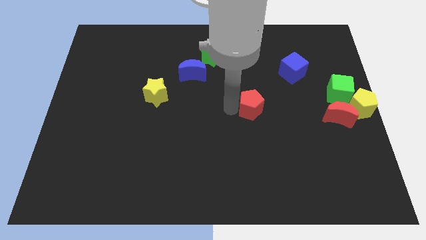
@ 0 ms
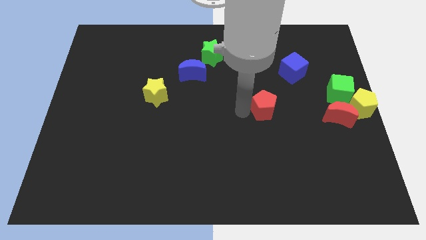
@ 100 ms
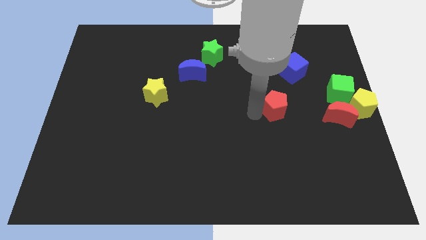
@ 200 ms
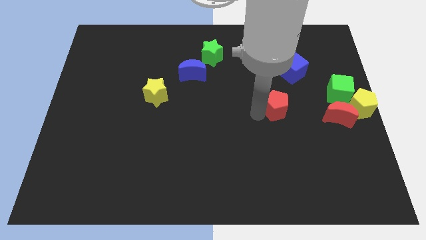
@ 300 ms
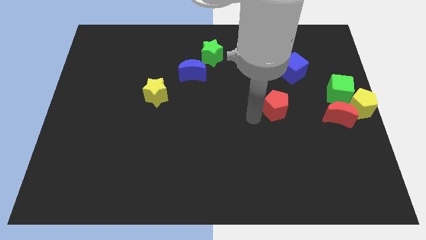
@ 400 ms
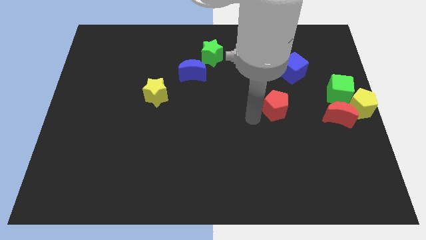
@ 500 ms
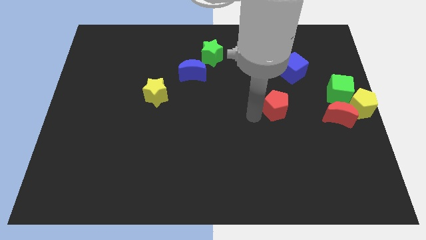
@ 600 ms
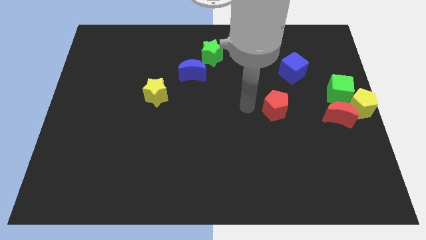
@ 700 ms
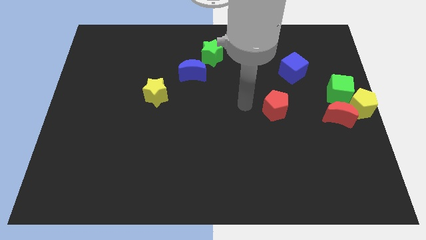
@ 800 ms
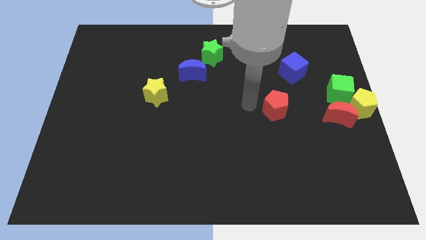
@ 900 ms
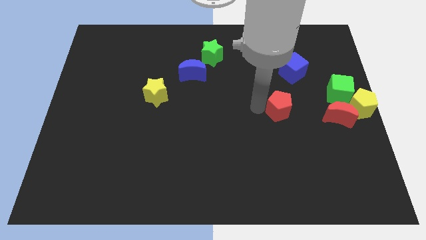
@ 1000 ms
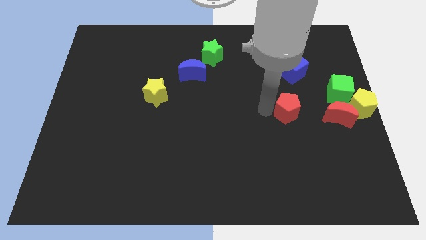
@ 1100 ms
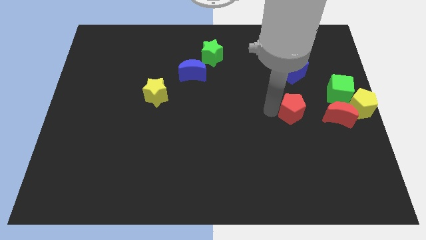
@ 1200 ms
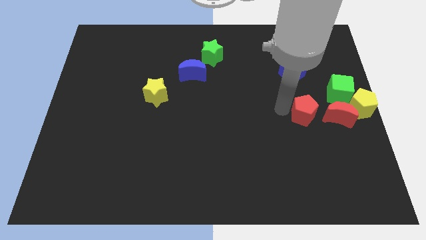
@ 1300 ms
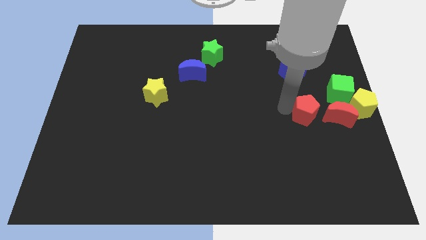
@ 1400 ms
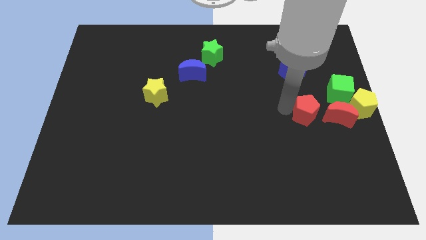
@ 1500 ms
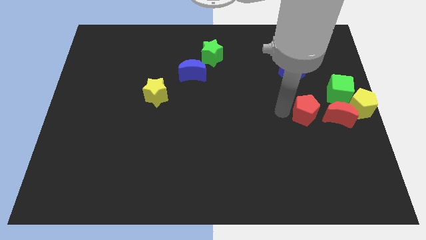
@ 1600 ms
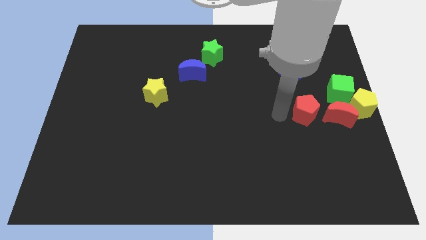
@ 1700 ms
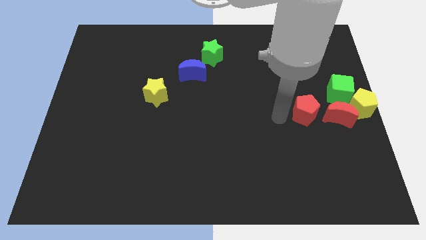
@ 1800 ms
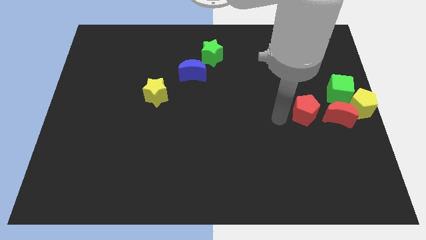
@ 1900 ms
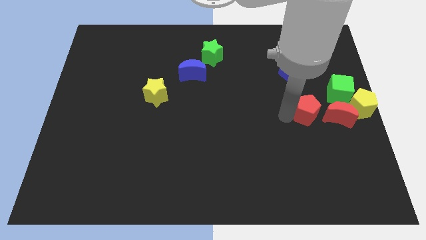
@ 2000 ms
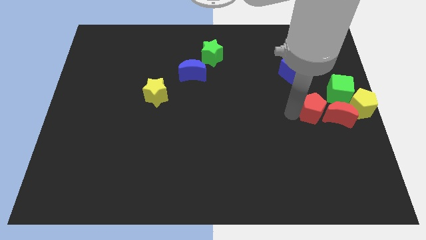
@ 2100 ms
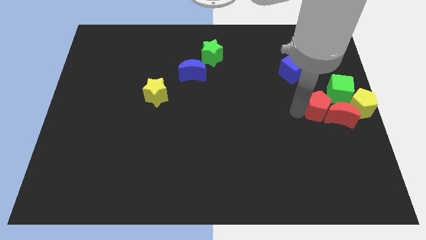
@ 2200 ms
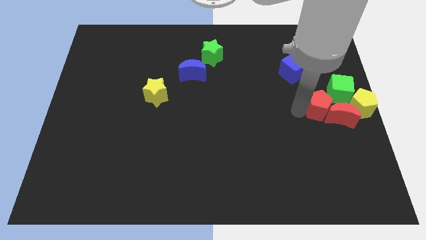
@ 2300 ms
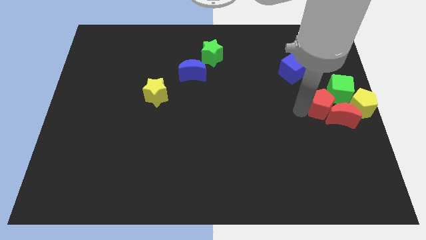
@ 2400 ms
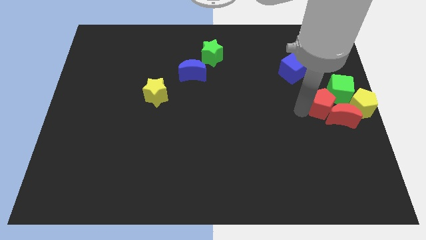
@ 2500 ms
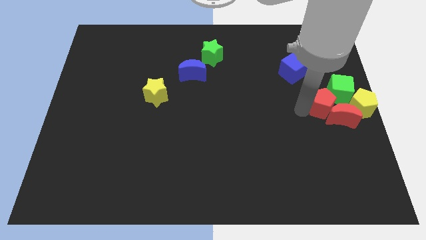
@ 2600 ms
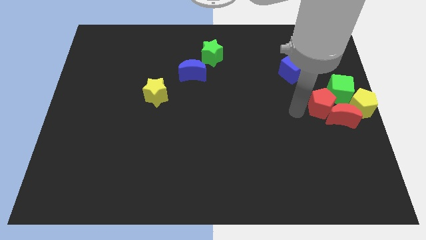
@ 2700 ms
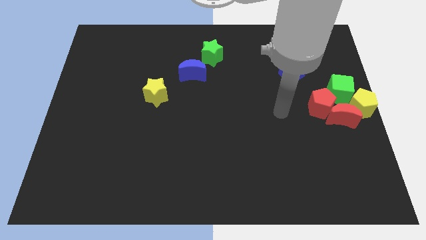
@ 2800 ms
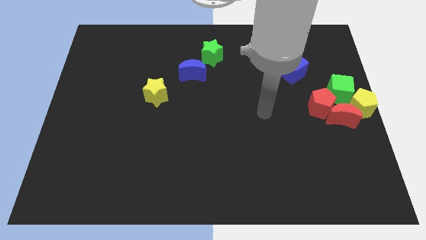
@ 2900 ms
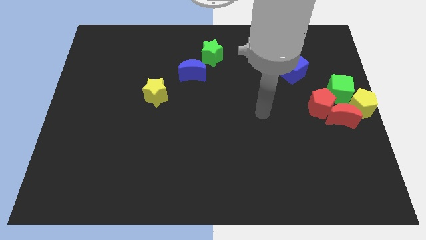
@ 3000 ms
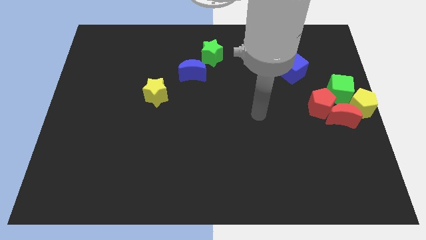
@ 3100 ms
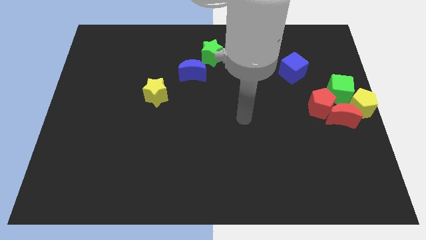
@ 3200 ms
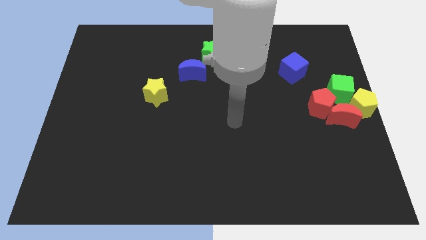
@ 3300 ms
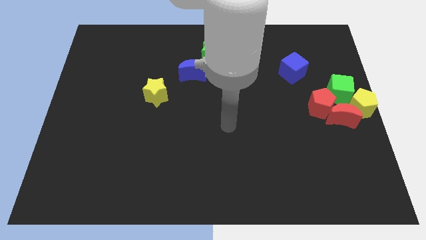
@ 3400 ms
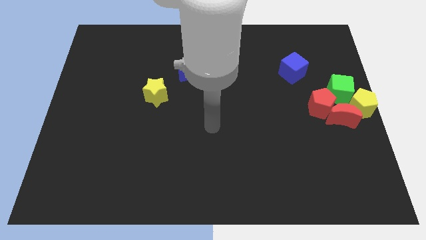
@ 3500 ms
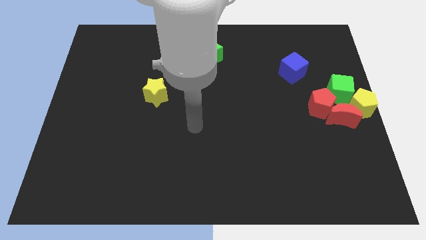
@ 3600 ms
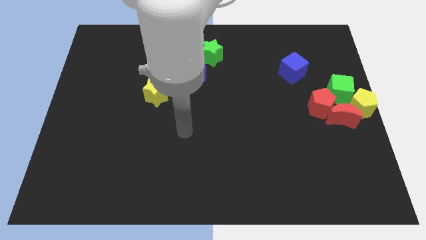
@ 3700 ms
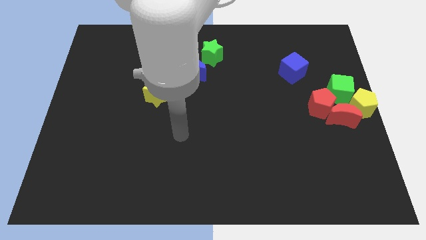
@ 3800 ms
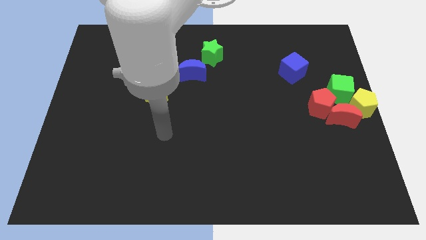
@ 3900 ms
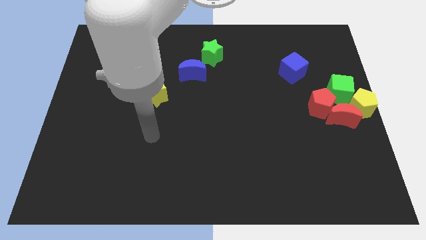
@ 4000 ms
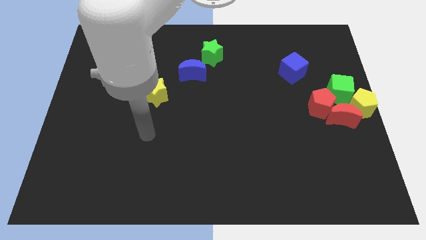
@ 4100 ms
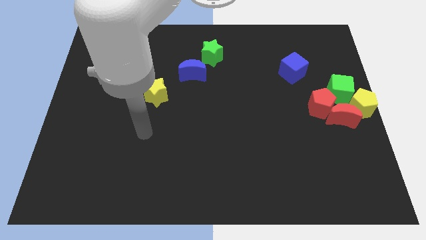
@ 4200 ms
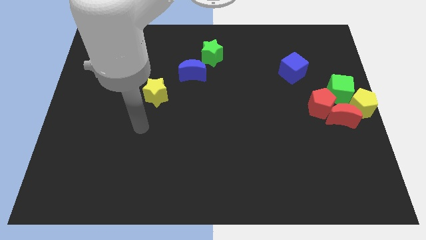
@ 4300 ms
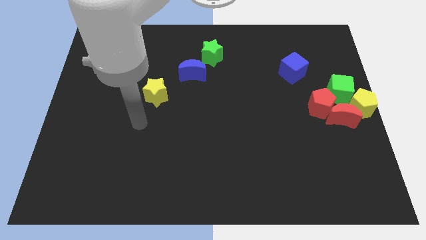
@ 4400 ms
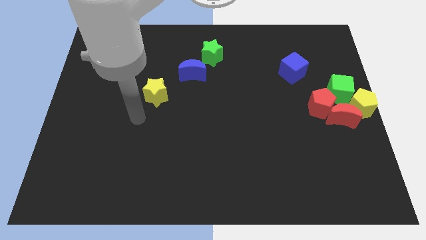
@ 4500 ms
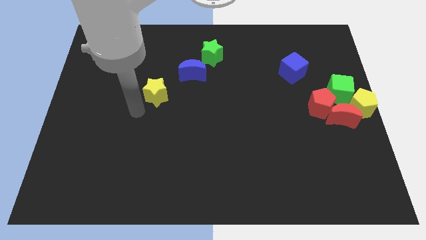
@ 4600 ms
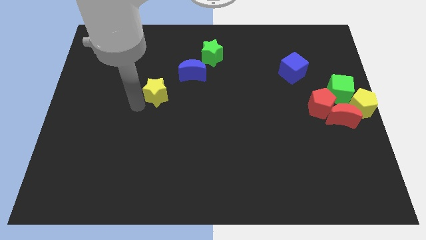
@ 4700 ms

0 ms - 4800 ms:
push the red pentagon into red crescent

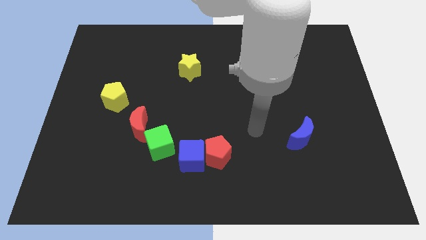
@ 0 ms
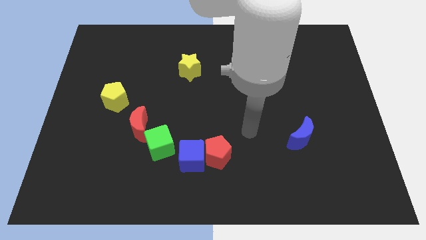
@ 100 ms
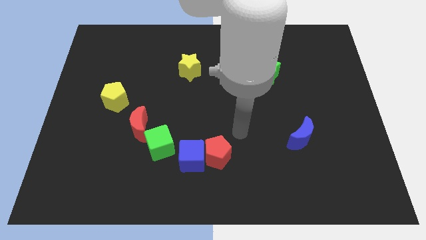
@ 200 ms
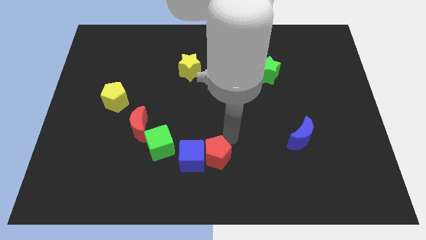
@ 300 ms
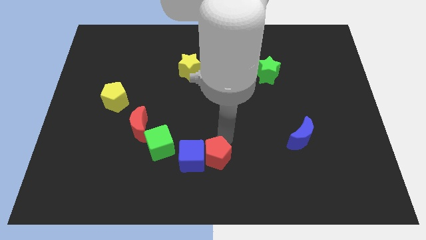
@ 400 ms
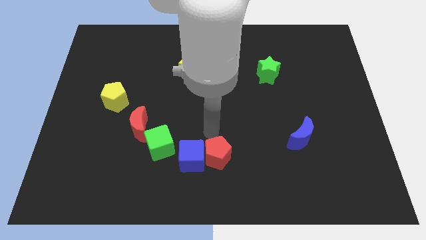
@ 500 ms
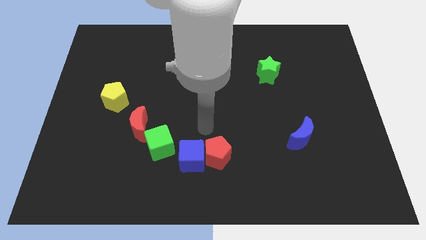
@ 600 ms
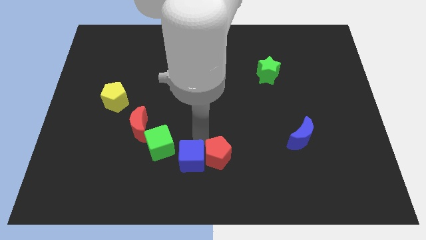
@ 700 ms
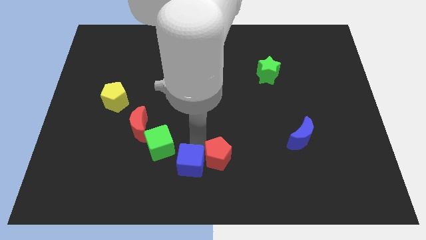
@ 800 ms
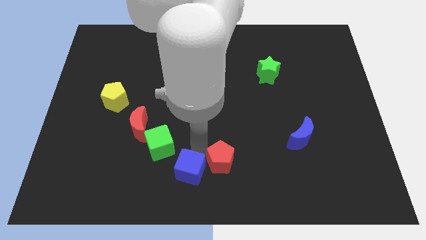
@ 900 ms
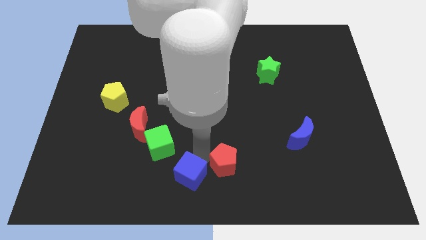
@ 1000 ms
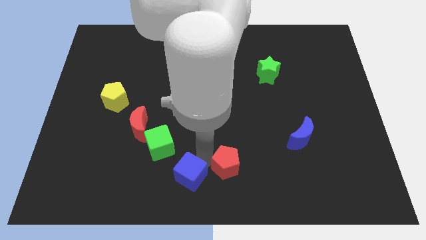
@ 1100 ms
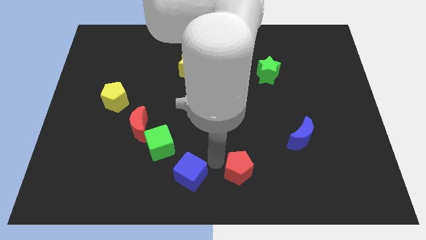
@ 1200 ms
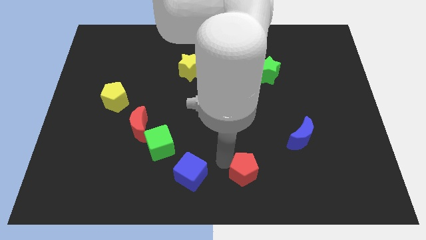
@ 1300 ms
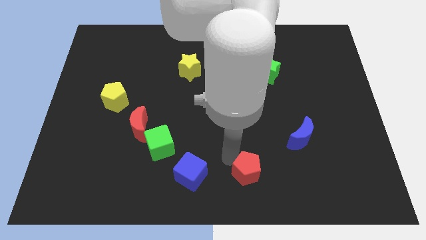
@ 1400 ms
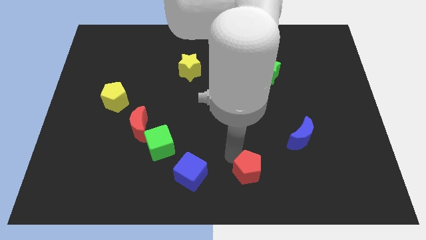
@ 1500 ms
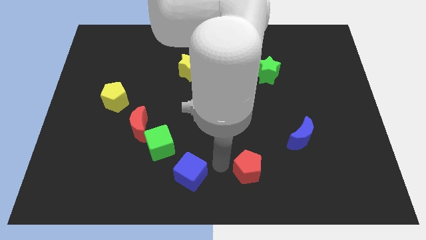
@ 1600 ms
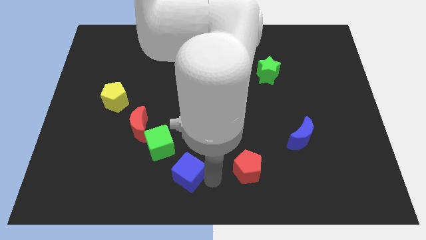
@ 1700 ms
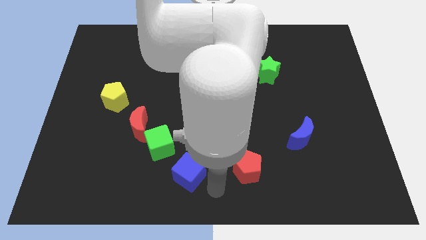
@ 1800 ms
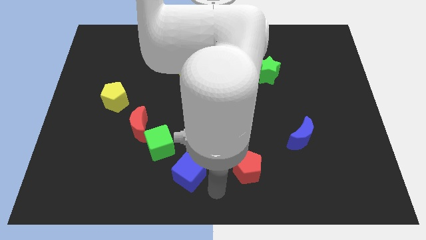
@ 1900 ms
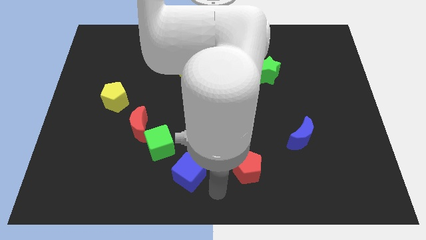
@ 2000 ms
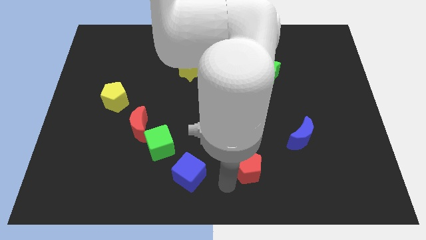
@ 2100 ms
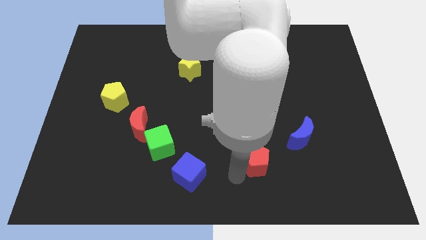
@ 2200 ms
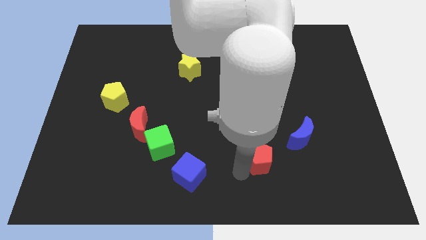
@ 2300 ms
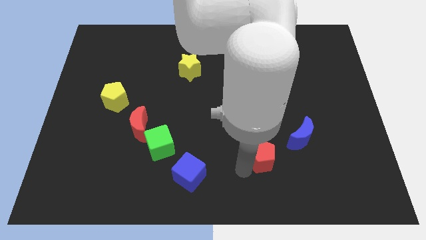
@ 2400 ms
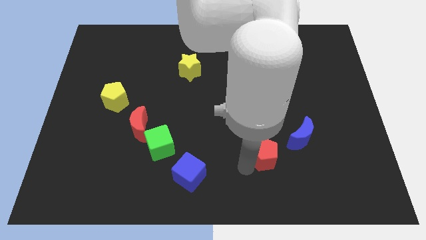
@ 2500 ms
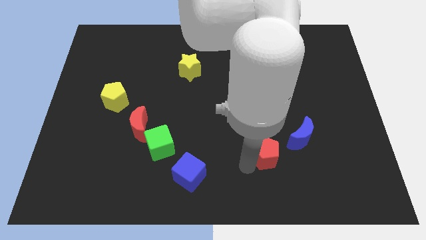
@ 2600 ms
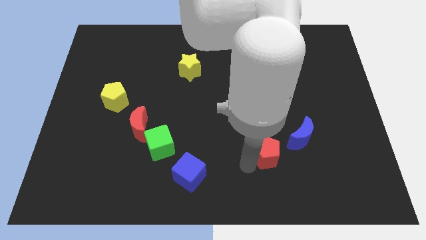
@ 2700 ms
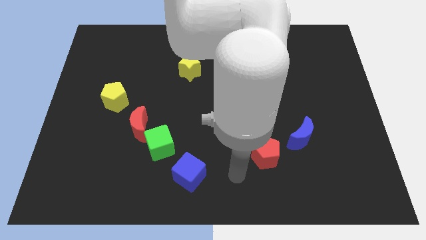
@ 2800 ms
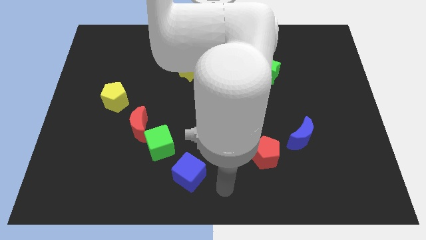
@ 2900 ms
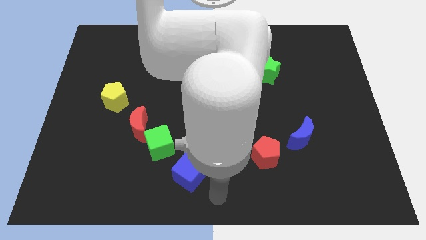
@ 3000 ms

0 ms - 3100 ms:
place the red pentagon to the left of the blue crescent

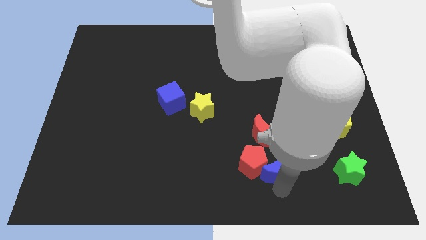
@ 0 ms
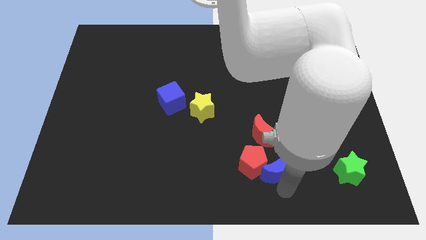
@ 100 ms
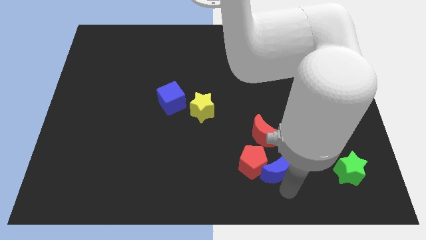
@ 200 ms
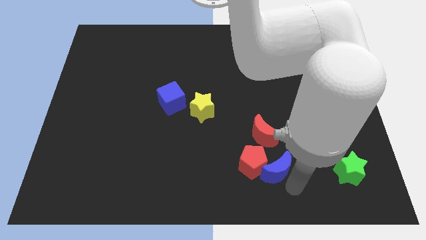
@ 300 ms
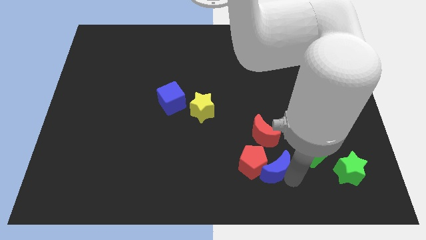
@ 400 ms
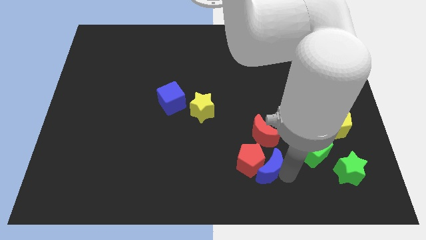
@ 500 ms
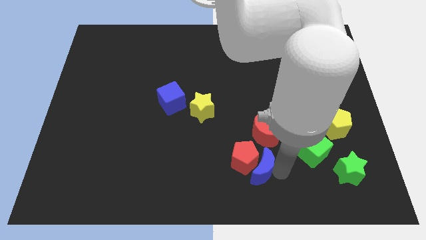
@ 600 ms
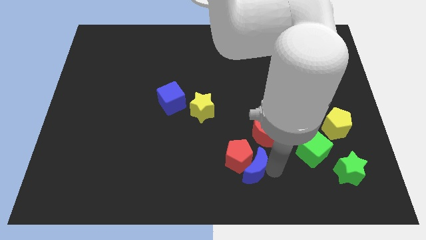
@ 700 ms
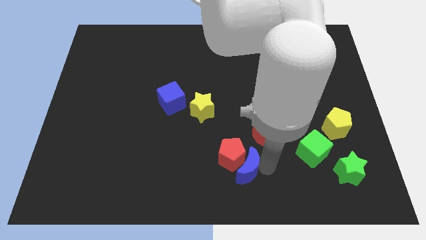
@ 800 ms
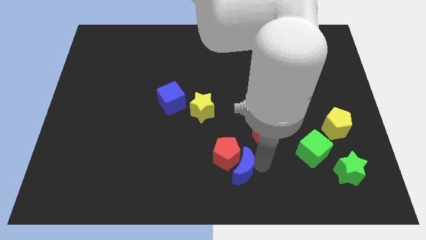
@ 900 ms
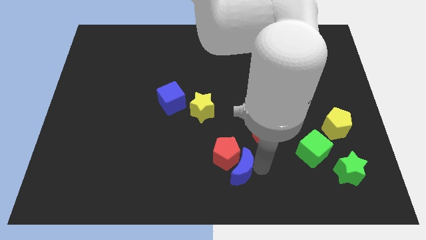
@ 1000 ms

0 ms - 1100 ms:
push blue crescent in to red pentagon
